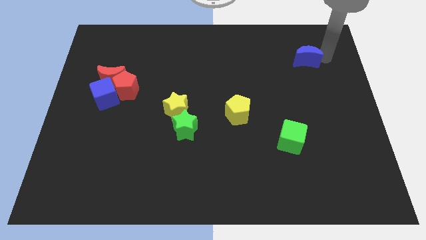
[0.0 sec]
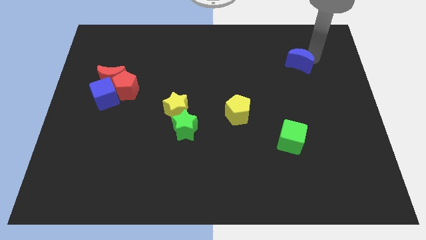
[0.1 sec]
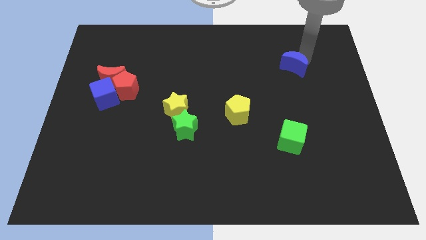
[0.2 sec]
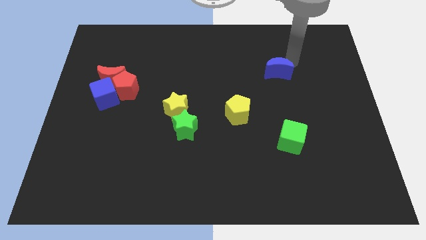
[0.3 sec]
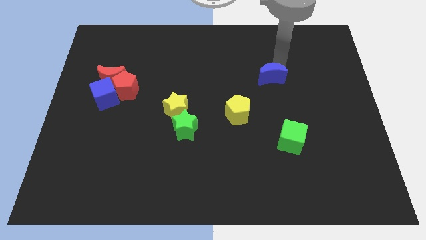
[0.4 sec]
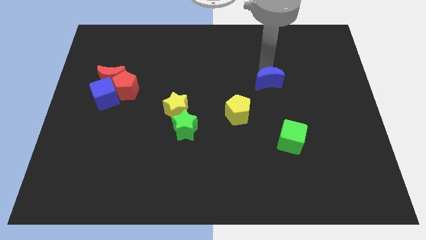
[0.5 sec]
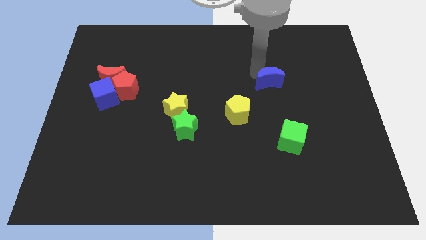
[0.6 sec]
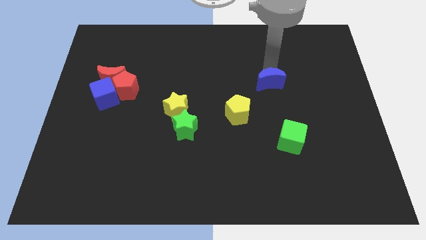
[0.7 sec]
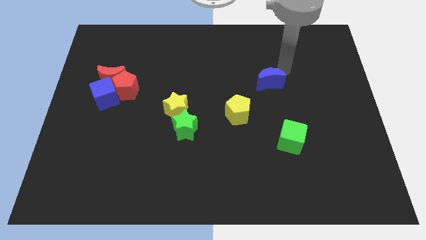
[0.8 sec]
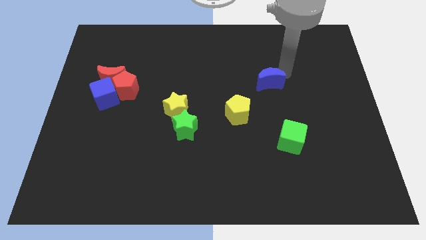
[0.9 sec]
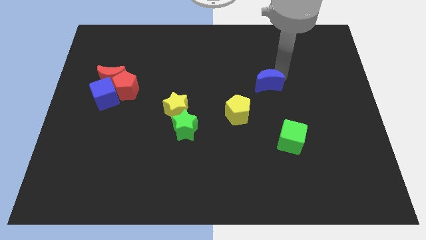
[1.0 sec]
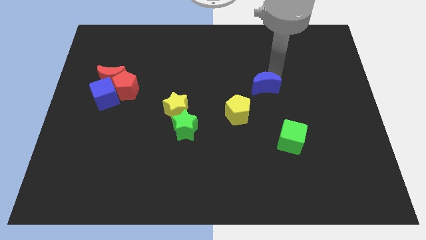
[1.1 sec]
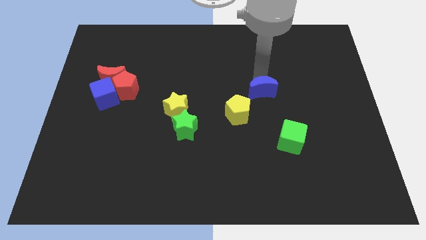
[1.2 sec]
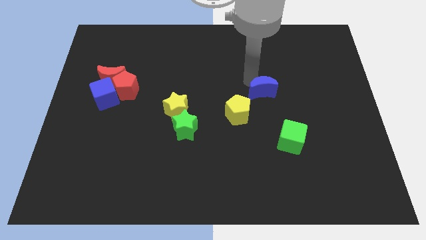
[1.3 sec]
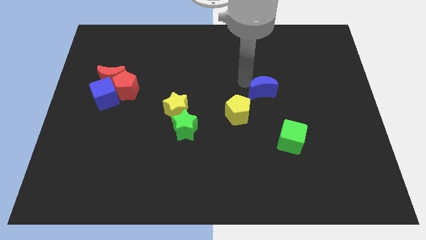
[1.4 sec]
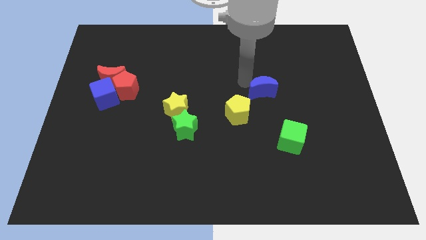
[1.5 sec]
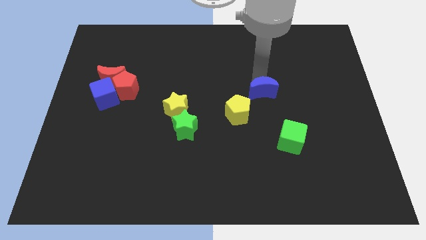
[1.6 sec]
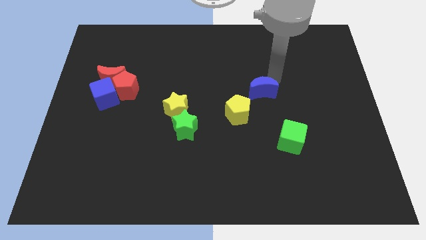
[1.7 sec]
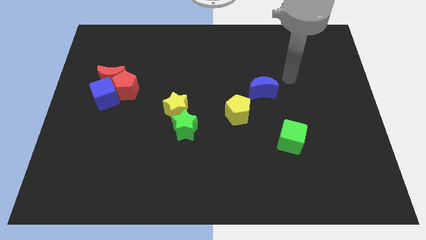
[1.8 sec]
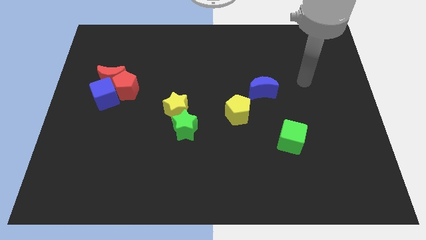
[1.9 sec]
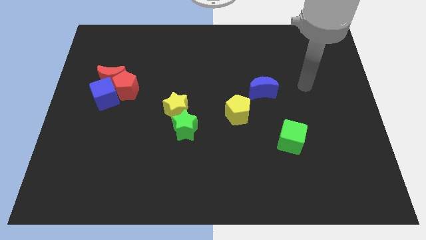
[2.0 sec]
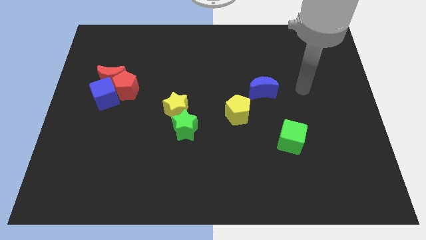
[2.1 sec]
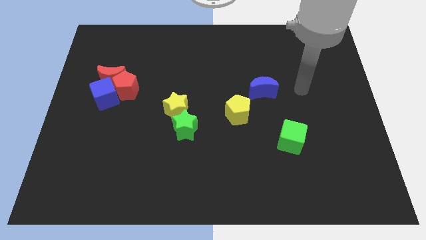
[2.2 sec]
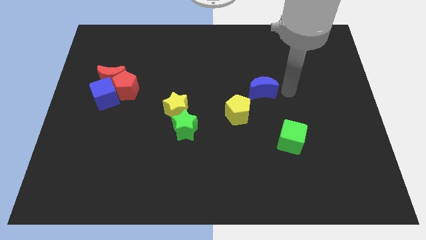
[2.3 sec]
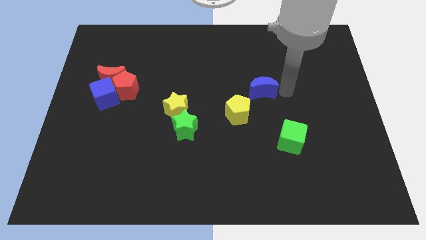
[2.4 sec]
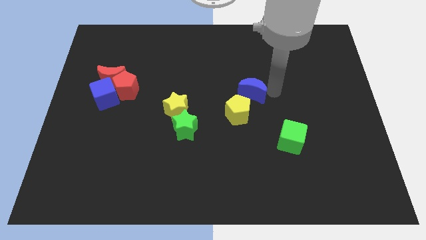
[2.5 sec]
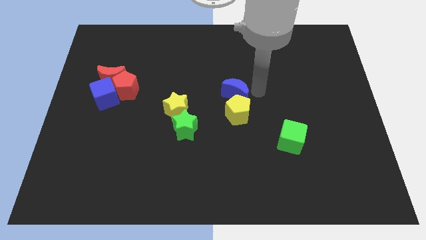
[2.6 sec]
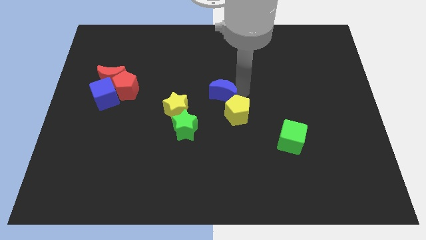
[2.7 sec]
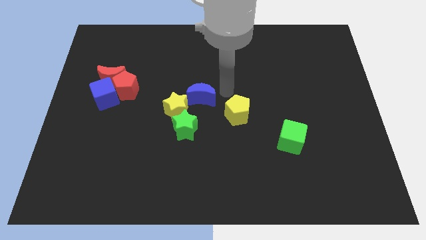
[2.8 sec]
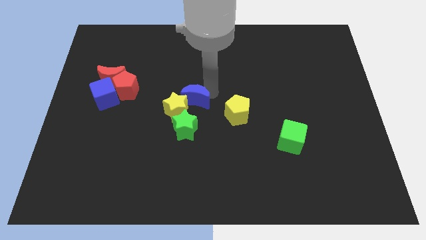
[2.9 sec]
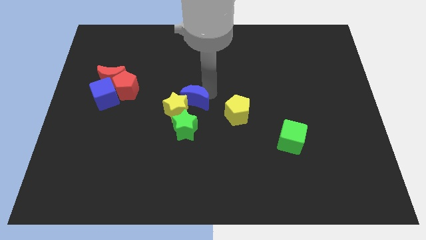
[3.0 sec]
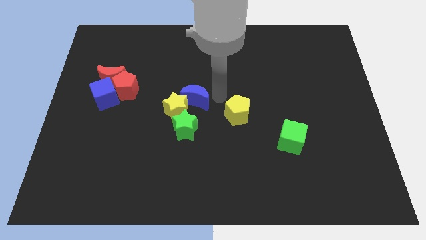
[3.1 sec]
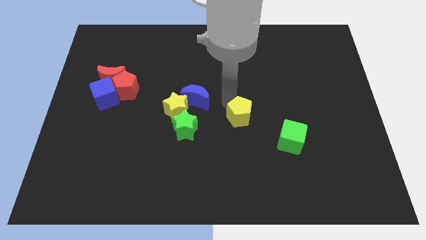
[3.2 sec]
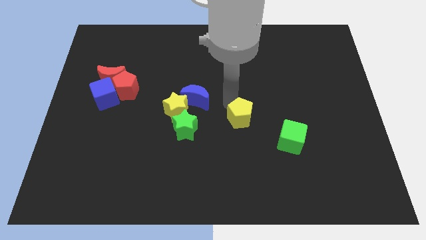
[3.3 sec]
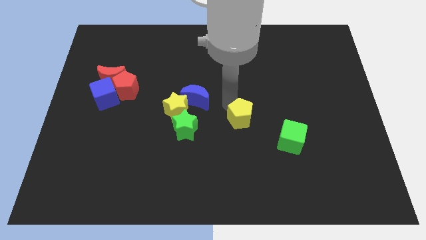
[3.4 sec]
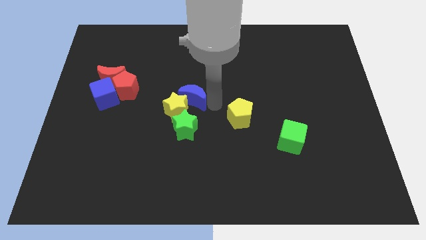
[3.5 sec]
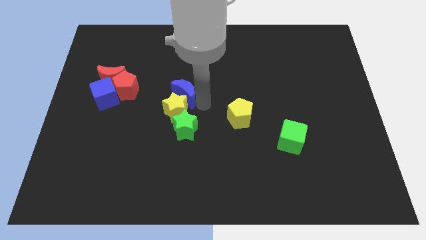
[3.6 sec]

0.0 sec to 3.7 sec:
push blue crescent towards yellow star

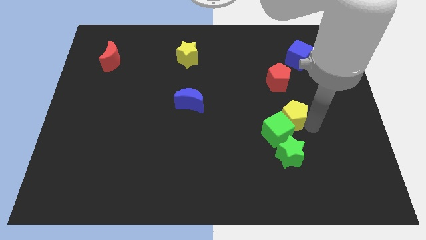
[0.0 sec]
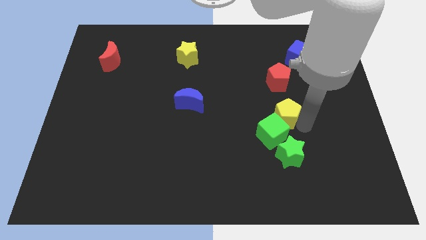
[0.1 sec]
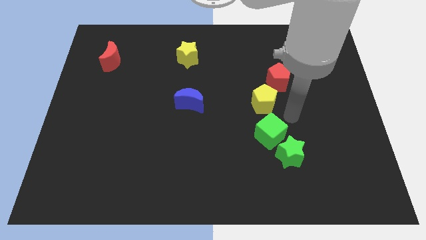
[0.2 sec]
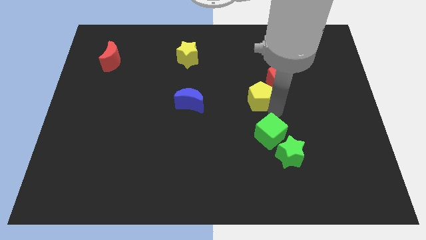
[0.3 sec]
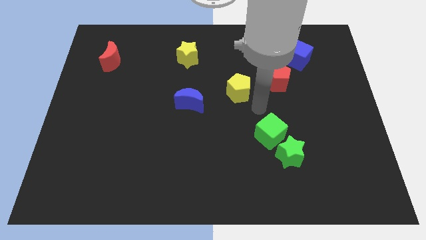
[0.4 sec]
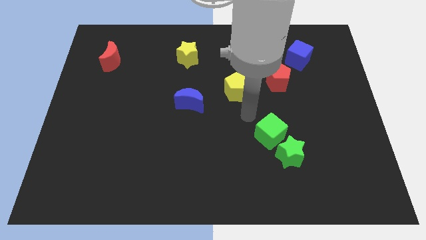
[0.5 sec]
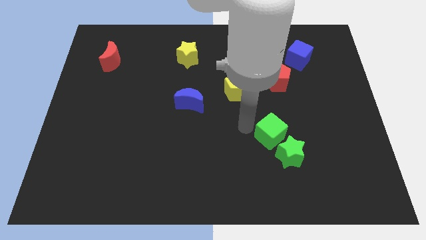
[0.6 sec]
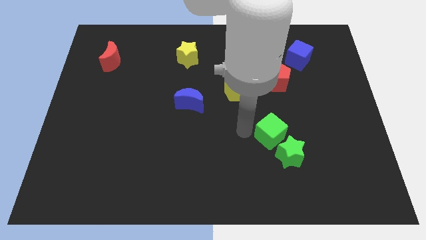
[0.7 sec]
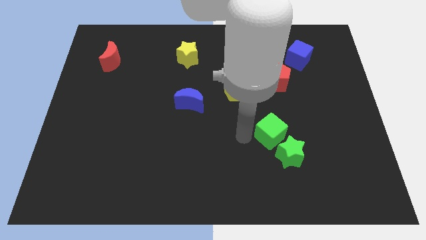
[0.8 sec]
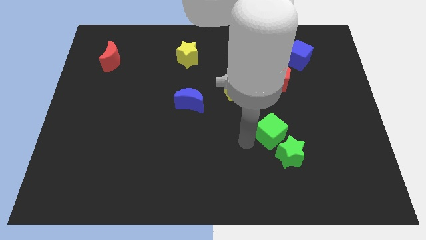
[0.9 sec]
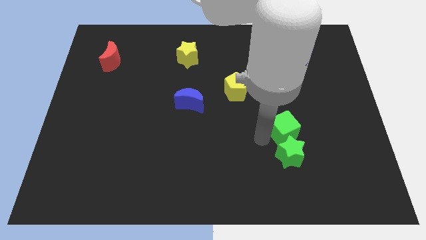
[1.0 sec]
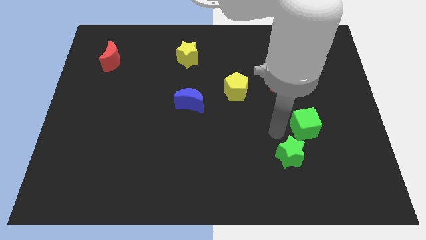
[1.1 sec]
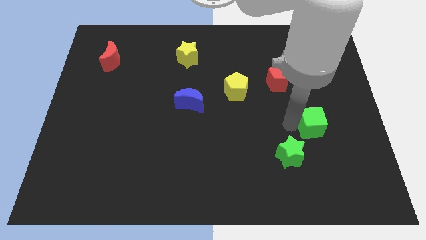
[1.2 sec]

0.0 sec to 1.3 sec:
separate the yellow pentagon and green cube

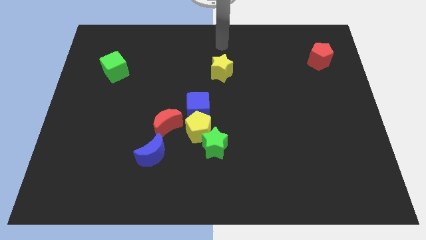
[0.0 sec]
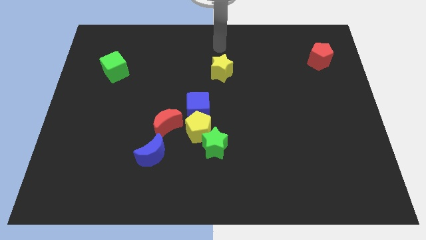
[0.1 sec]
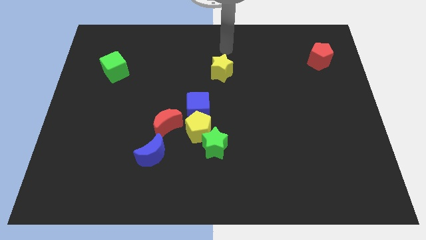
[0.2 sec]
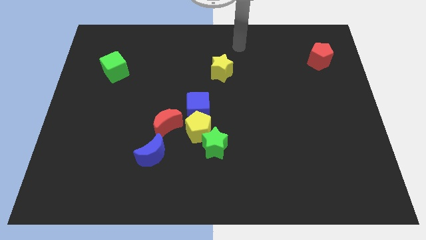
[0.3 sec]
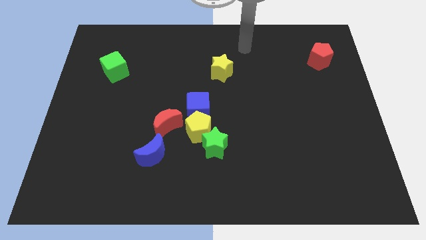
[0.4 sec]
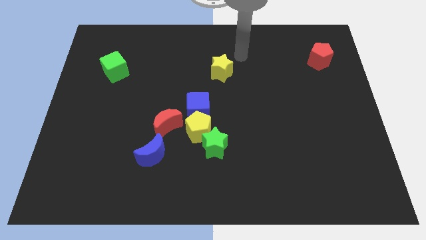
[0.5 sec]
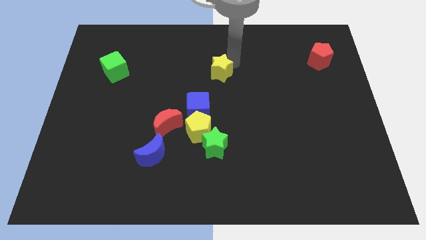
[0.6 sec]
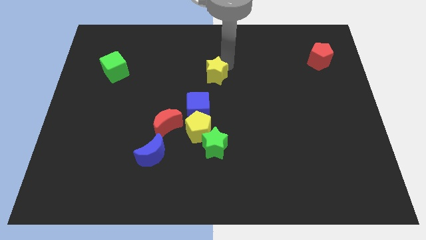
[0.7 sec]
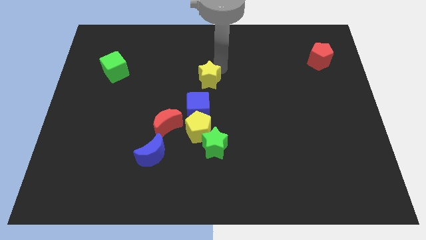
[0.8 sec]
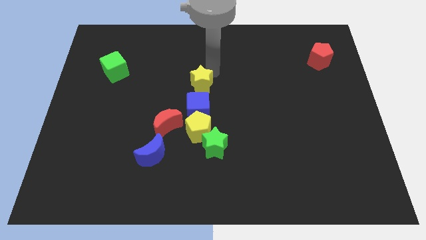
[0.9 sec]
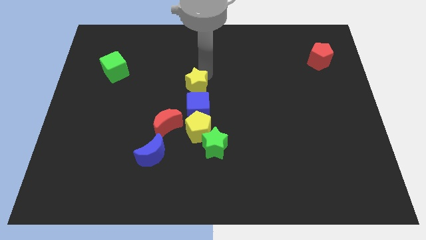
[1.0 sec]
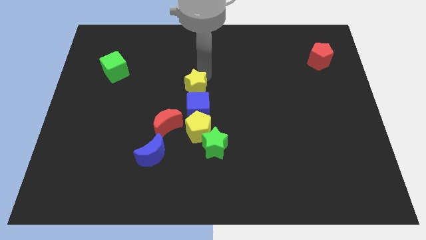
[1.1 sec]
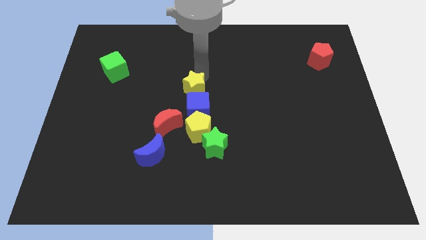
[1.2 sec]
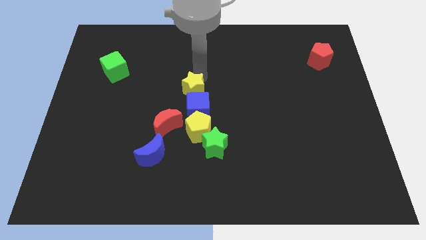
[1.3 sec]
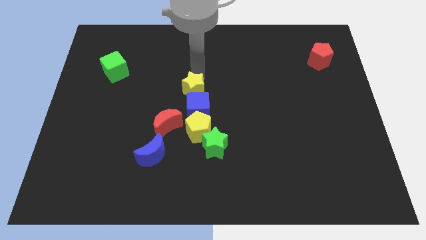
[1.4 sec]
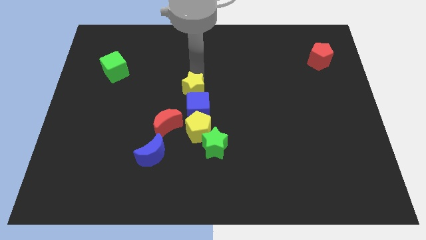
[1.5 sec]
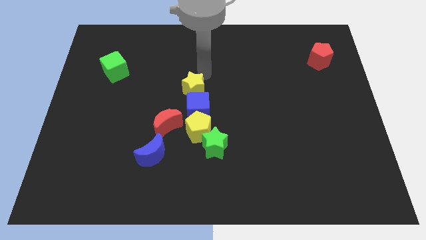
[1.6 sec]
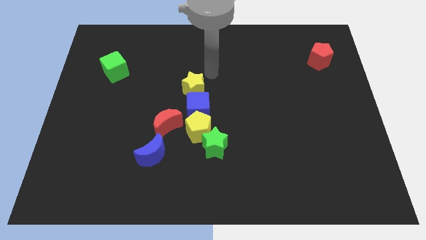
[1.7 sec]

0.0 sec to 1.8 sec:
drag the yellow star close to the blue cube

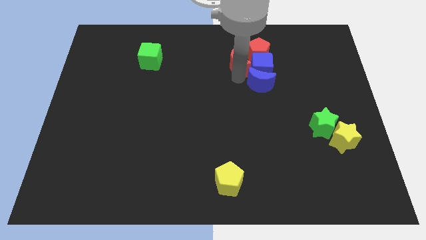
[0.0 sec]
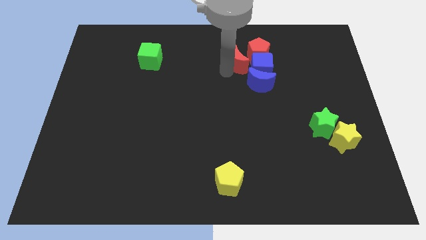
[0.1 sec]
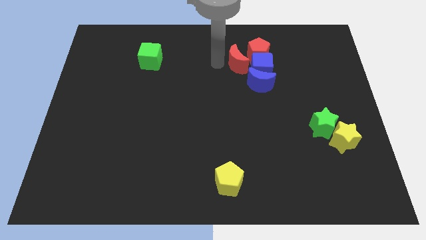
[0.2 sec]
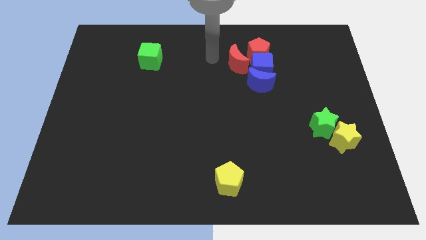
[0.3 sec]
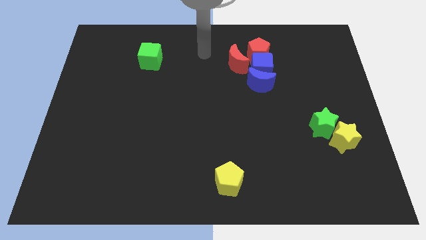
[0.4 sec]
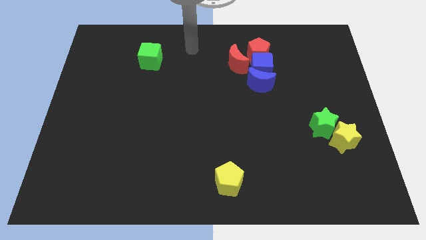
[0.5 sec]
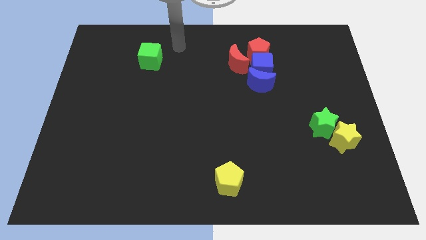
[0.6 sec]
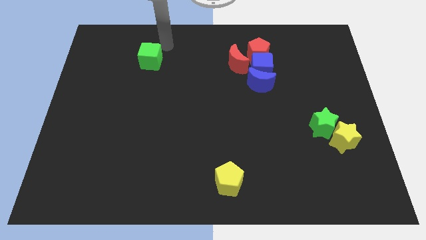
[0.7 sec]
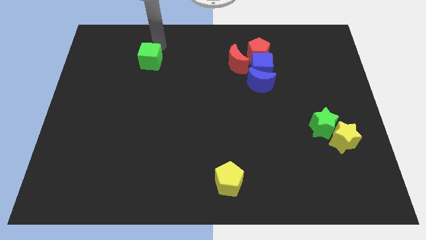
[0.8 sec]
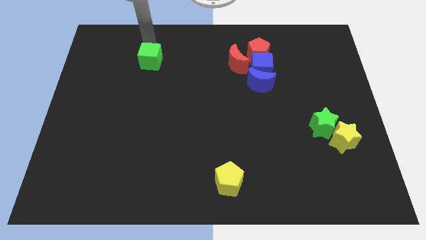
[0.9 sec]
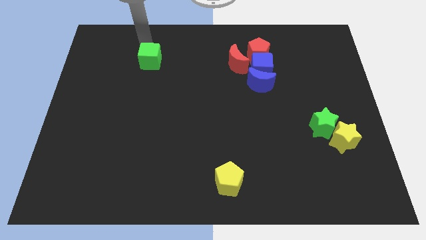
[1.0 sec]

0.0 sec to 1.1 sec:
move arm above green cube

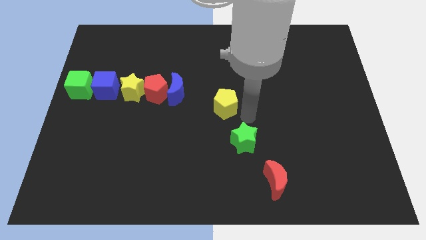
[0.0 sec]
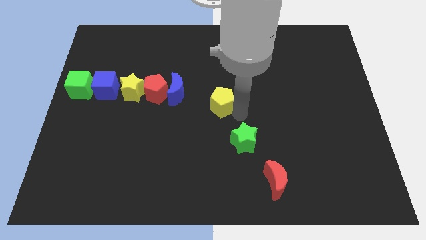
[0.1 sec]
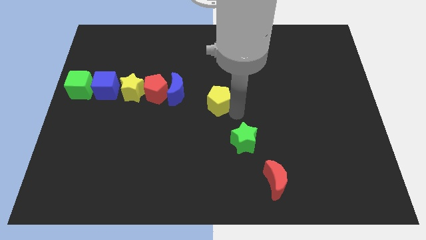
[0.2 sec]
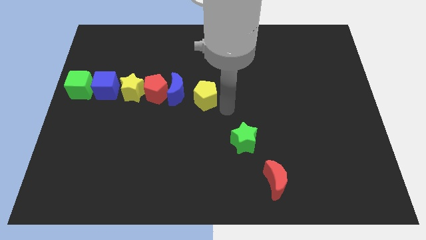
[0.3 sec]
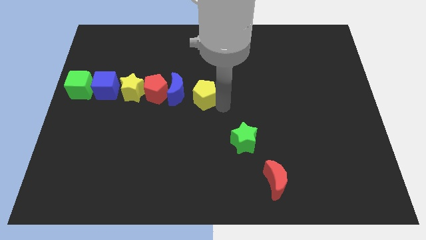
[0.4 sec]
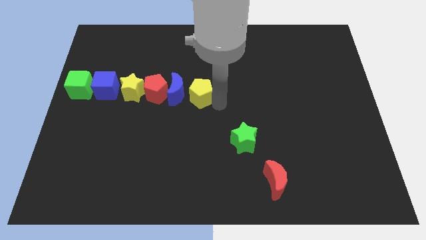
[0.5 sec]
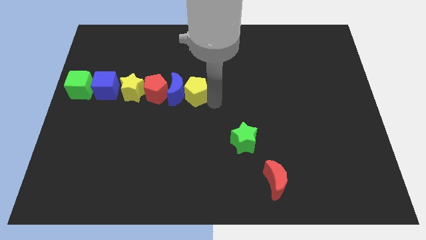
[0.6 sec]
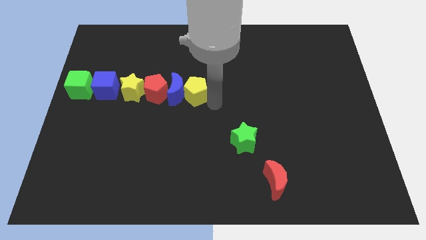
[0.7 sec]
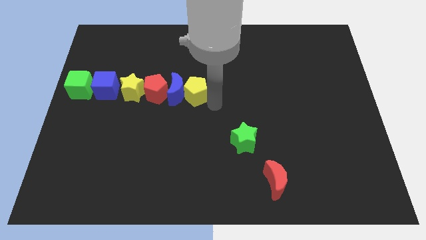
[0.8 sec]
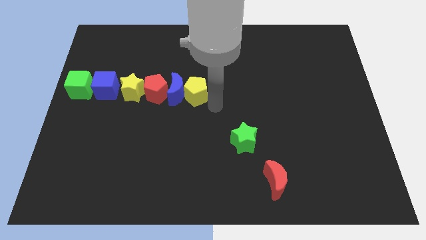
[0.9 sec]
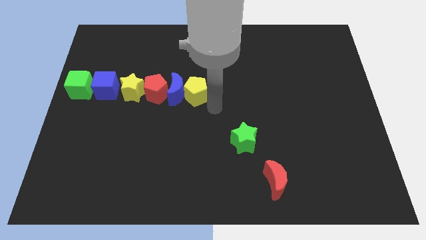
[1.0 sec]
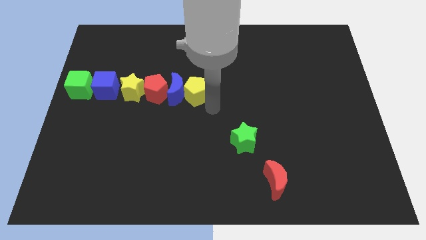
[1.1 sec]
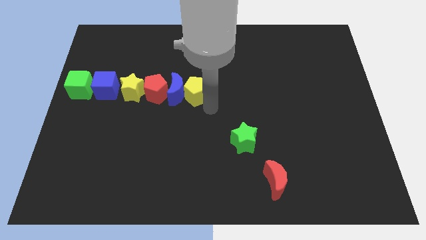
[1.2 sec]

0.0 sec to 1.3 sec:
place yellow pentagon near to blue crescent
